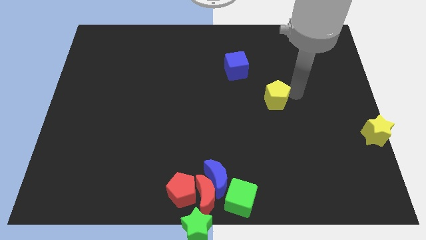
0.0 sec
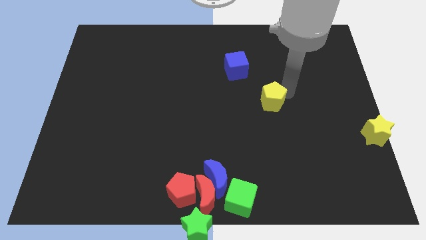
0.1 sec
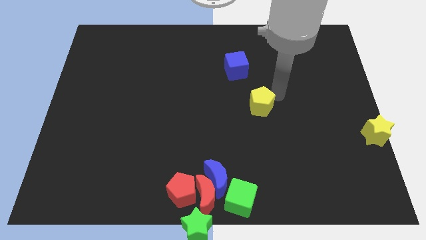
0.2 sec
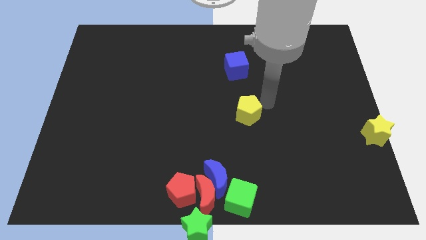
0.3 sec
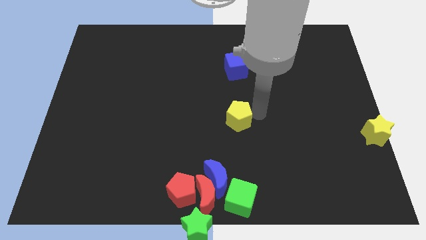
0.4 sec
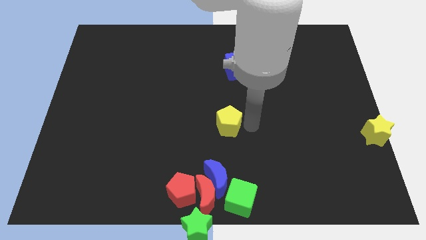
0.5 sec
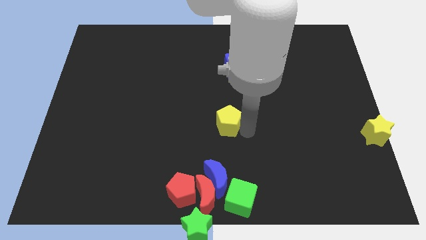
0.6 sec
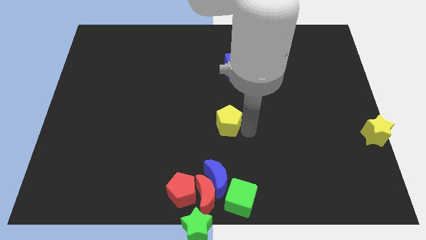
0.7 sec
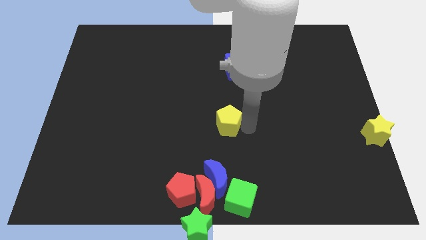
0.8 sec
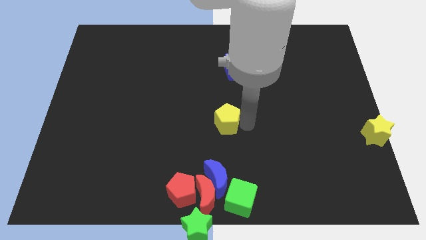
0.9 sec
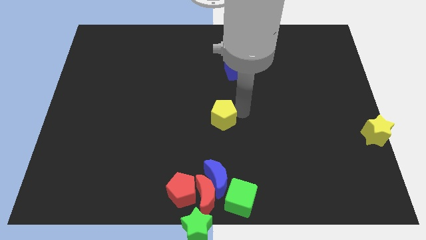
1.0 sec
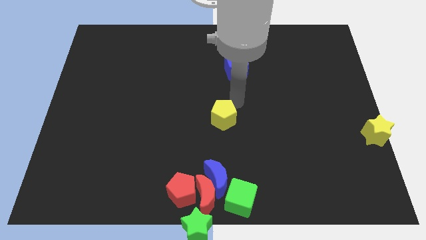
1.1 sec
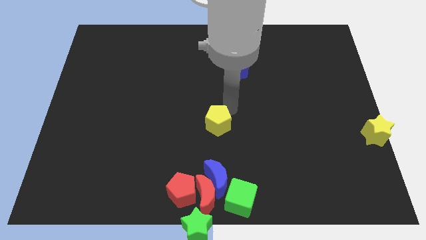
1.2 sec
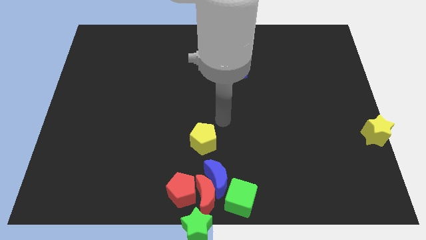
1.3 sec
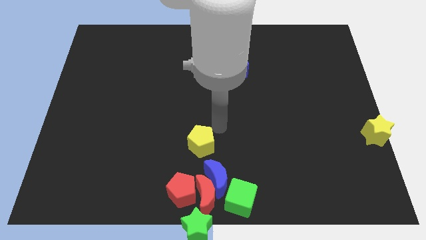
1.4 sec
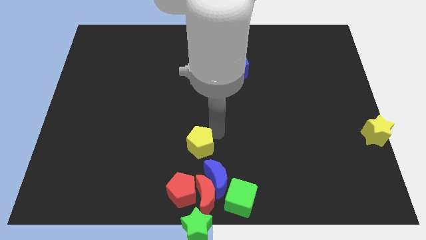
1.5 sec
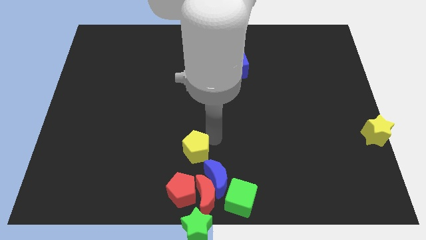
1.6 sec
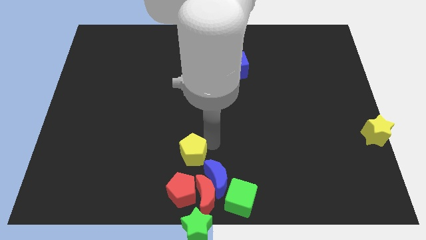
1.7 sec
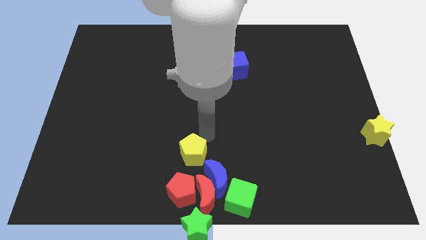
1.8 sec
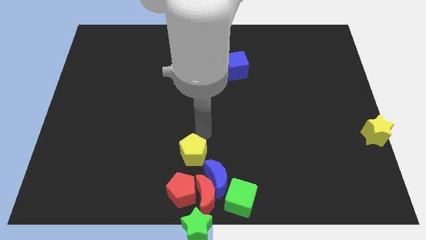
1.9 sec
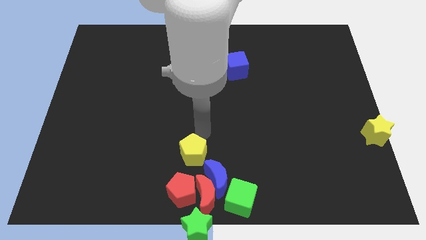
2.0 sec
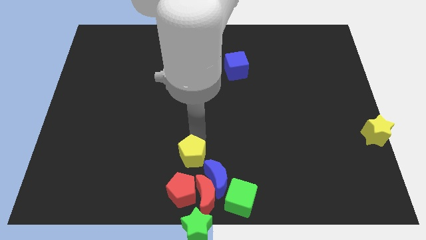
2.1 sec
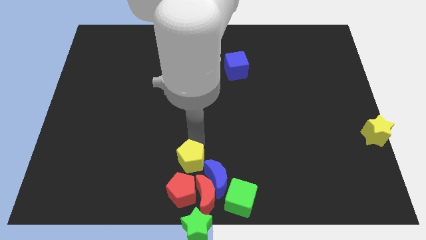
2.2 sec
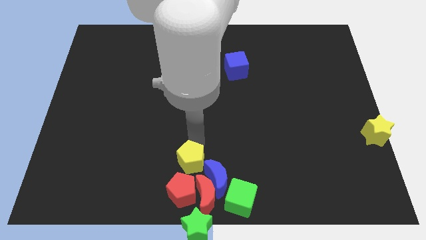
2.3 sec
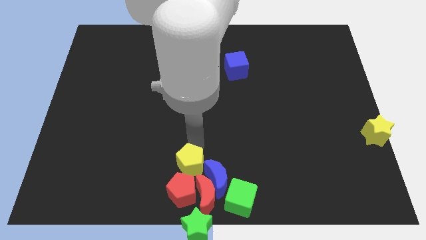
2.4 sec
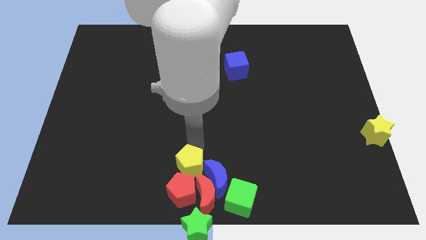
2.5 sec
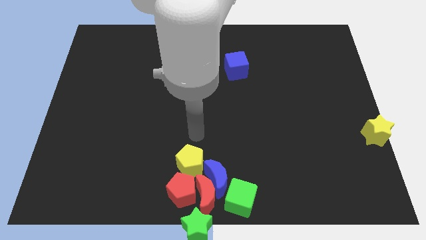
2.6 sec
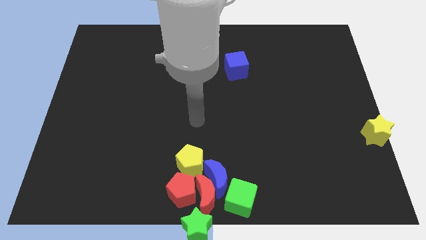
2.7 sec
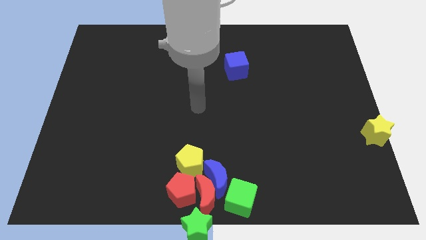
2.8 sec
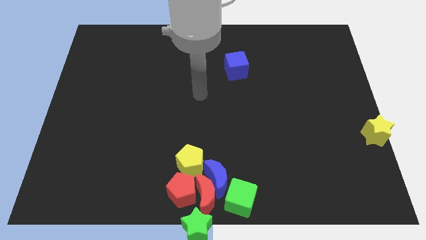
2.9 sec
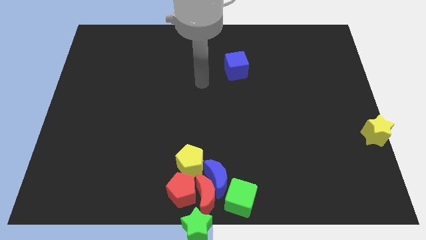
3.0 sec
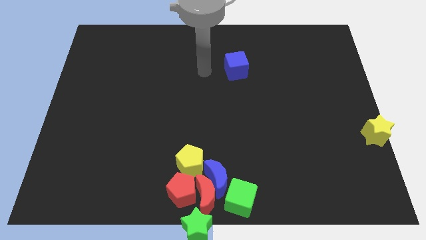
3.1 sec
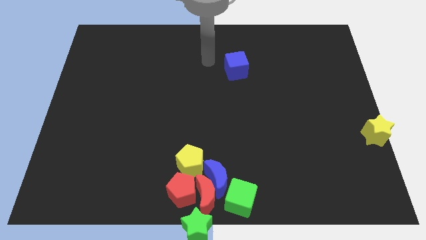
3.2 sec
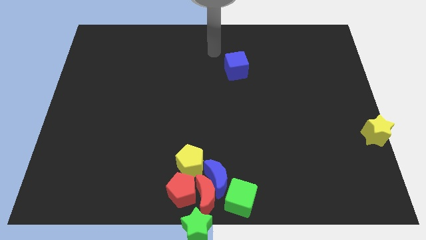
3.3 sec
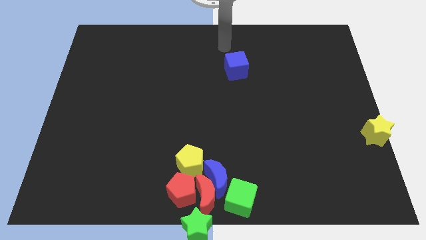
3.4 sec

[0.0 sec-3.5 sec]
slide yellow pentagon in to group of blocks

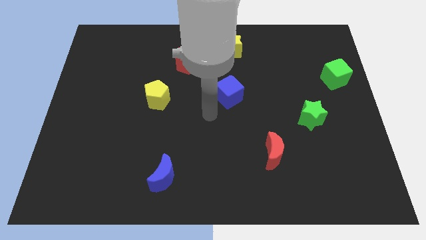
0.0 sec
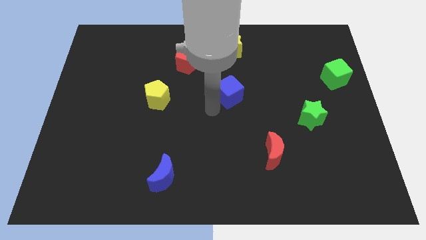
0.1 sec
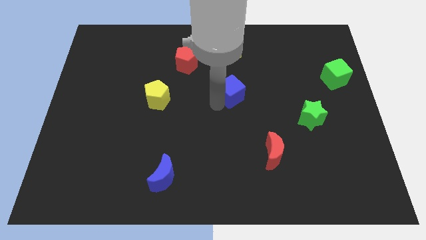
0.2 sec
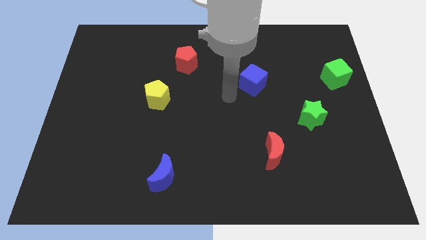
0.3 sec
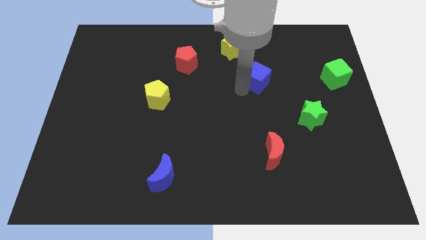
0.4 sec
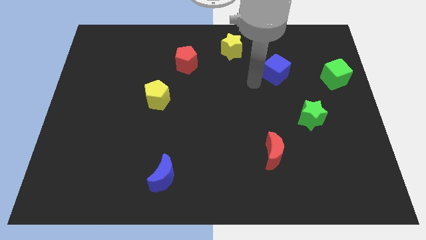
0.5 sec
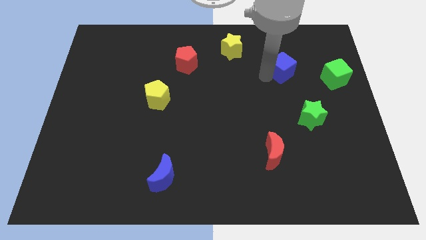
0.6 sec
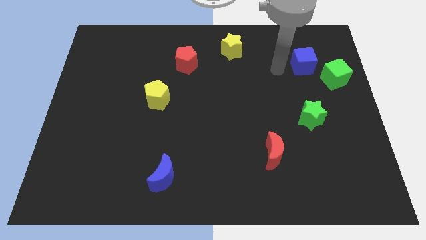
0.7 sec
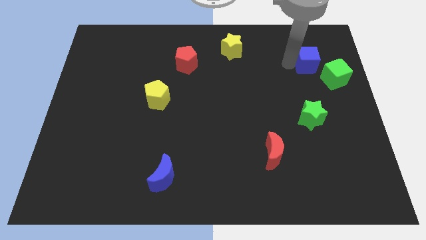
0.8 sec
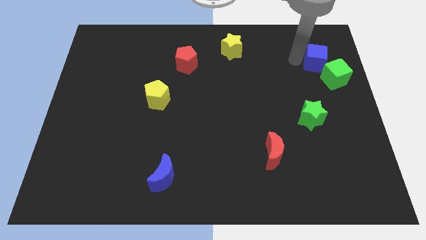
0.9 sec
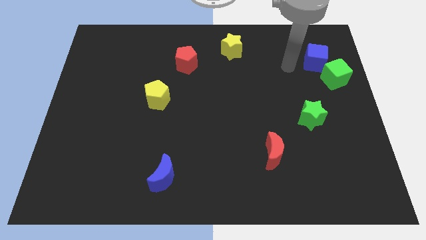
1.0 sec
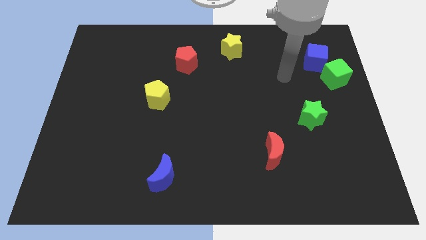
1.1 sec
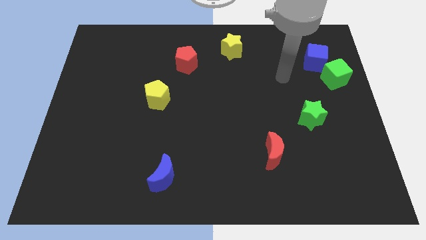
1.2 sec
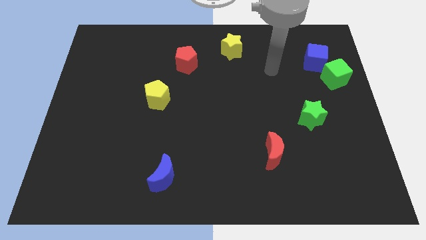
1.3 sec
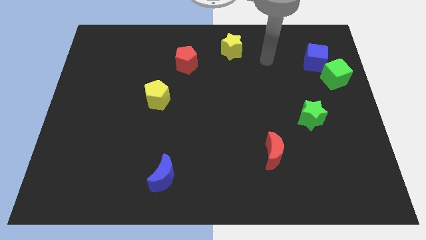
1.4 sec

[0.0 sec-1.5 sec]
move the blue cube into the green cube

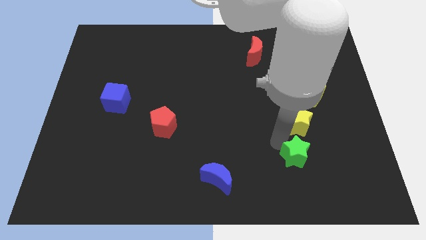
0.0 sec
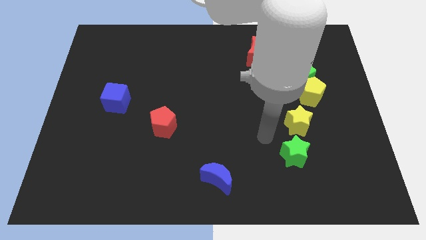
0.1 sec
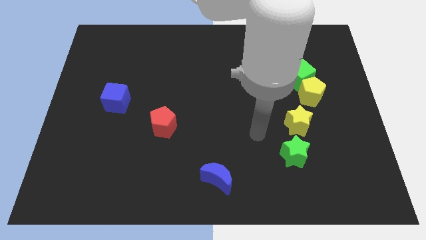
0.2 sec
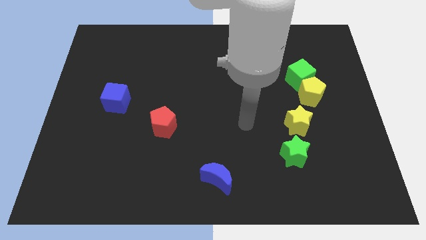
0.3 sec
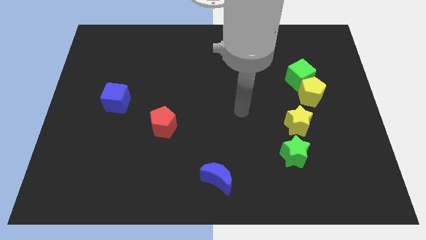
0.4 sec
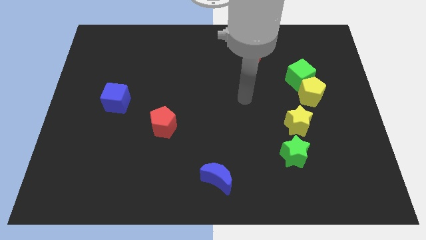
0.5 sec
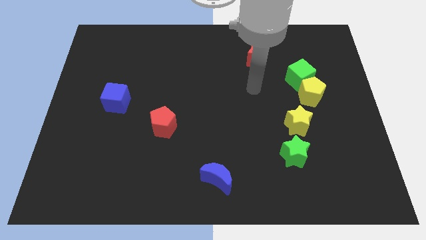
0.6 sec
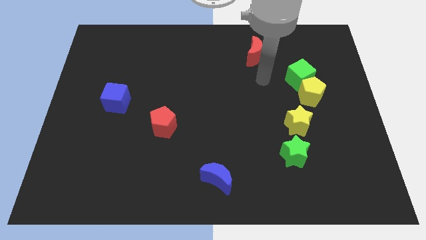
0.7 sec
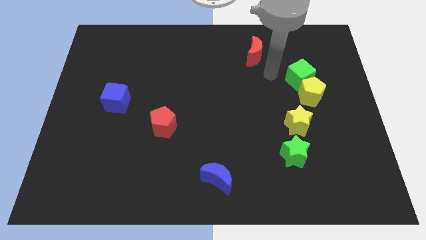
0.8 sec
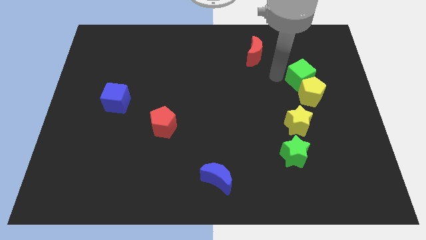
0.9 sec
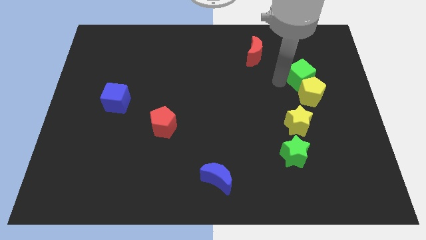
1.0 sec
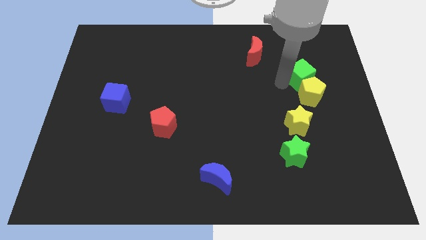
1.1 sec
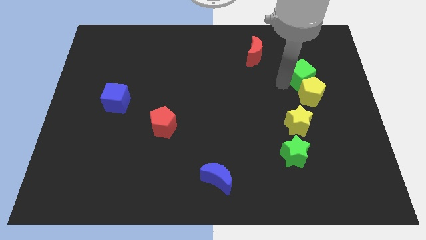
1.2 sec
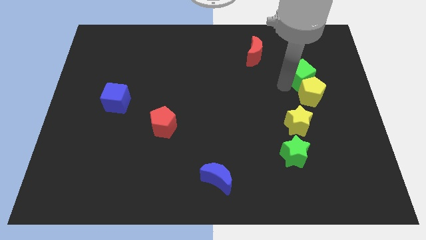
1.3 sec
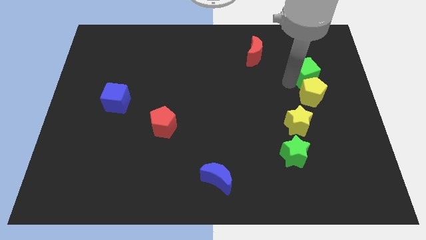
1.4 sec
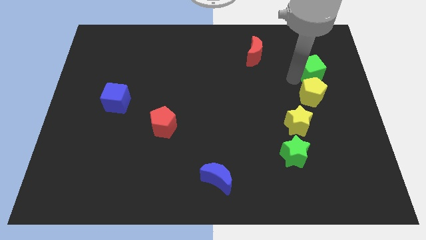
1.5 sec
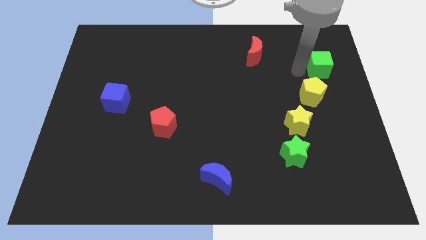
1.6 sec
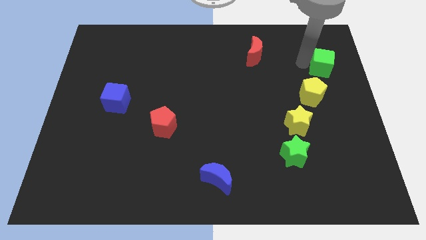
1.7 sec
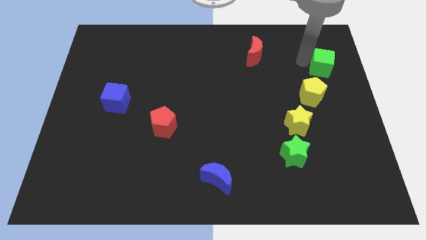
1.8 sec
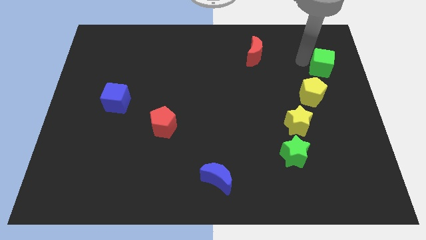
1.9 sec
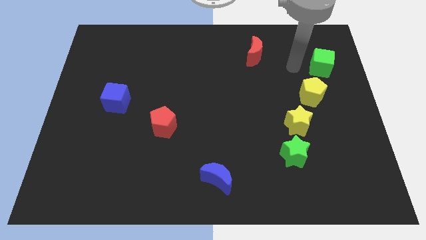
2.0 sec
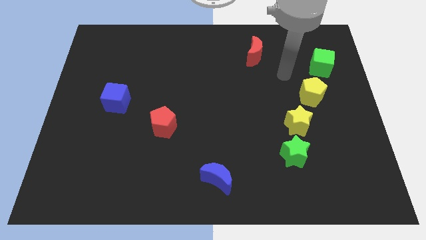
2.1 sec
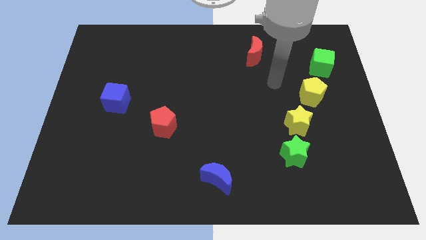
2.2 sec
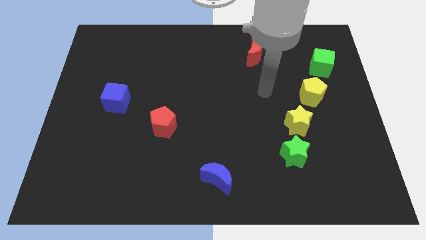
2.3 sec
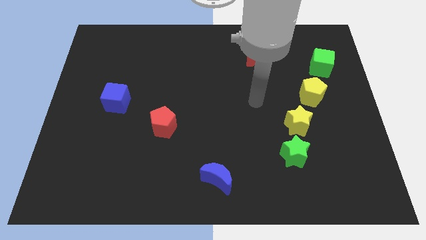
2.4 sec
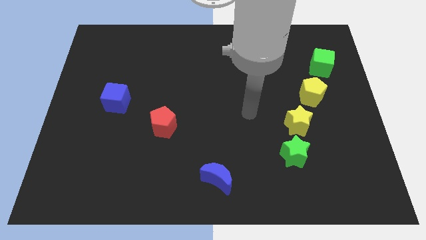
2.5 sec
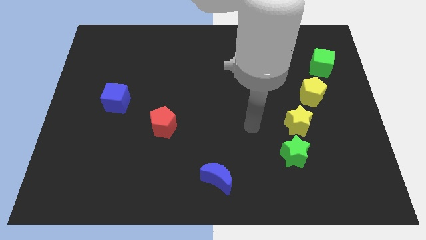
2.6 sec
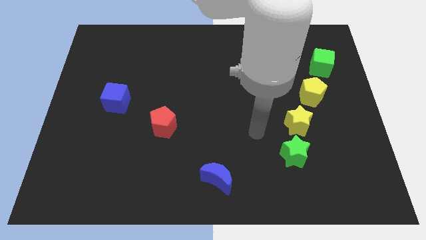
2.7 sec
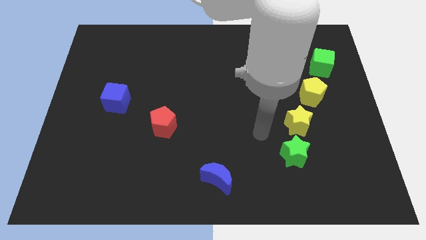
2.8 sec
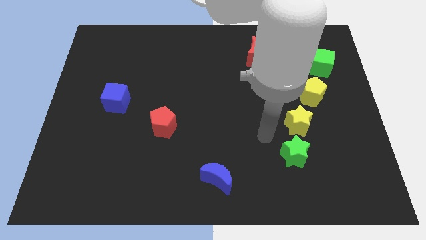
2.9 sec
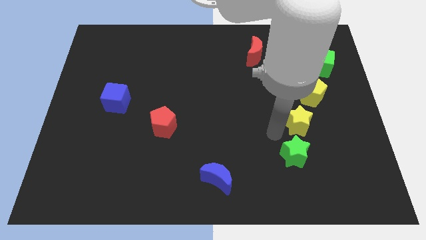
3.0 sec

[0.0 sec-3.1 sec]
separate the green cube from the yellow pentagon and go away

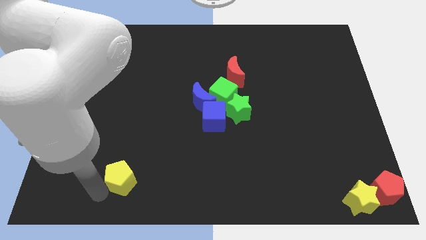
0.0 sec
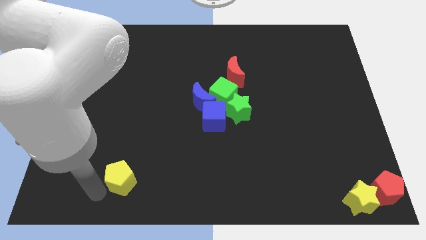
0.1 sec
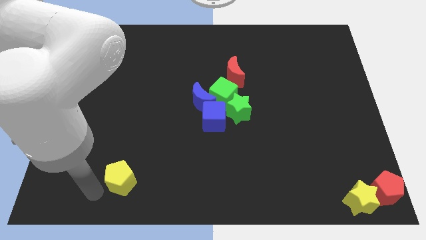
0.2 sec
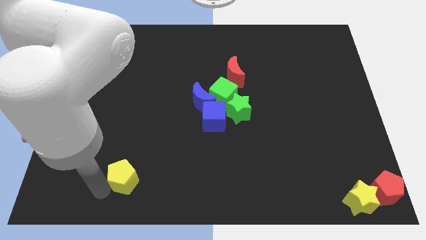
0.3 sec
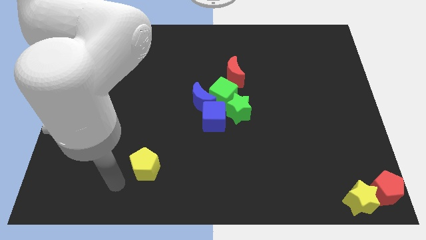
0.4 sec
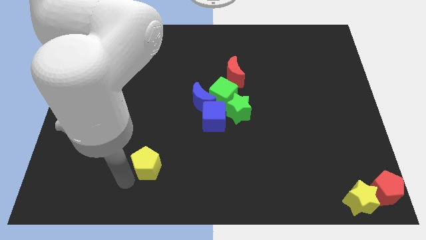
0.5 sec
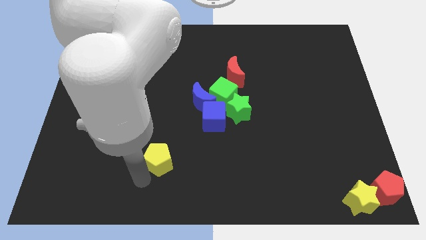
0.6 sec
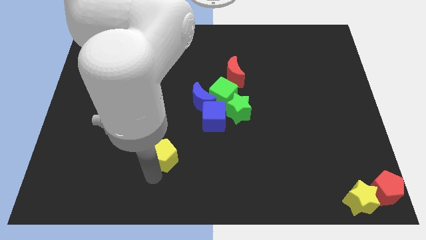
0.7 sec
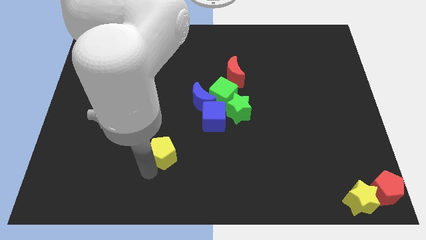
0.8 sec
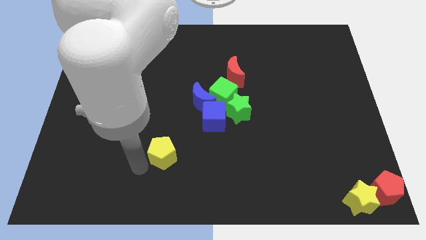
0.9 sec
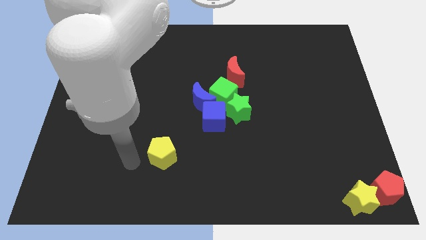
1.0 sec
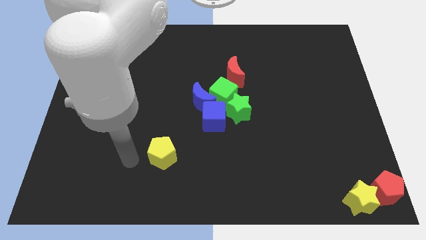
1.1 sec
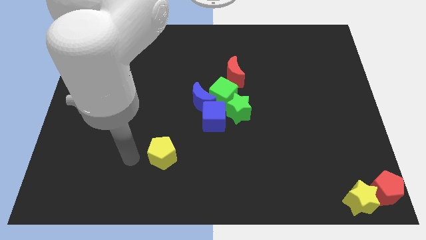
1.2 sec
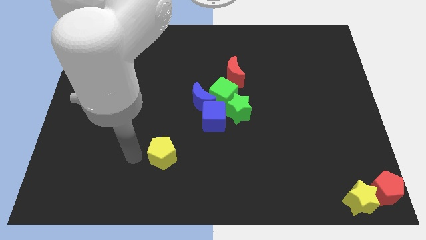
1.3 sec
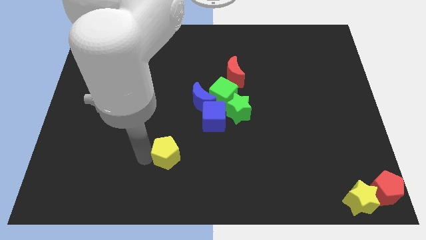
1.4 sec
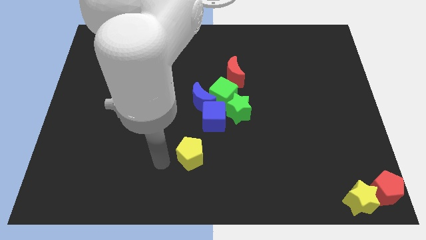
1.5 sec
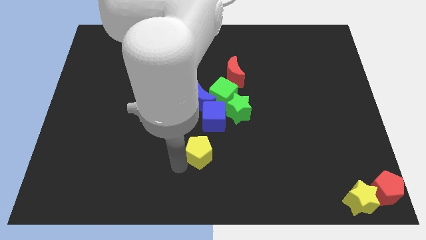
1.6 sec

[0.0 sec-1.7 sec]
move yellow pentagon left below the blue cube
